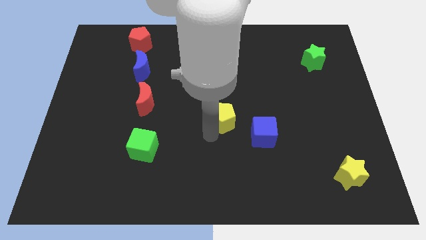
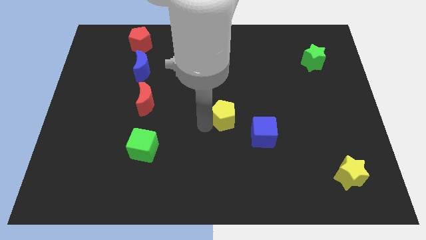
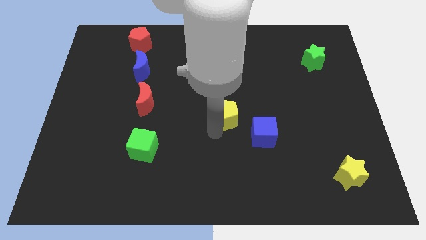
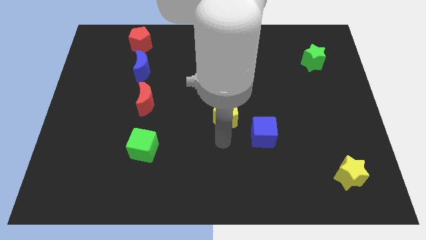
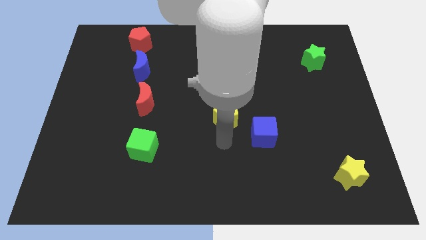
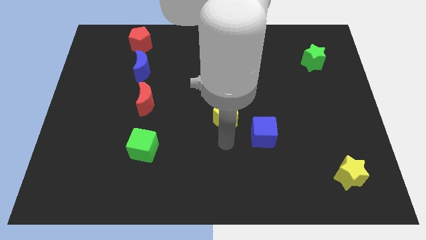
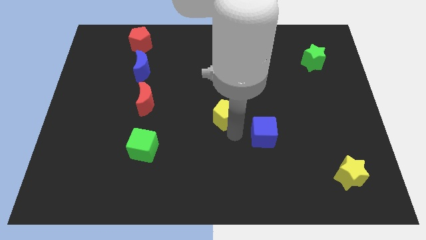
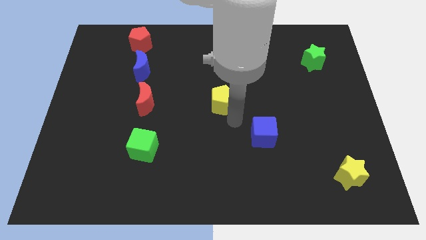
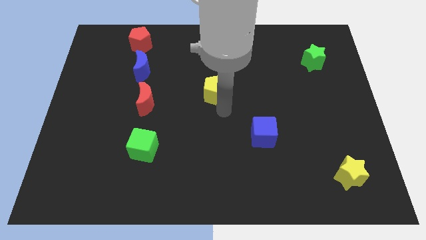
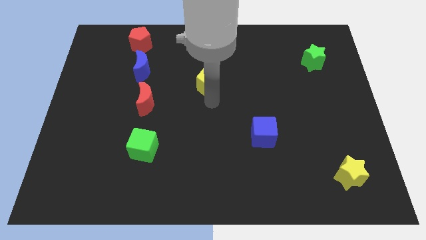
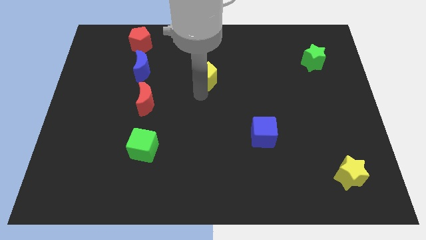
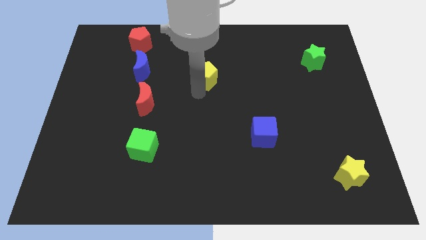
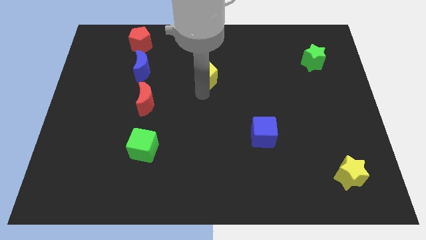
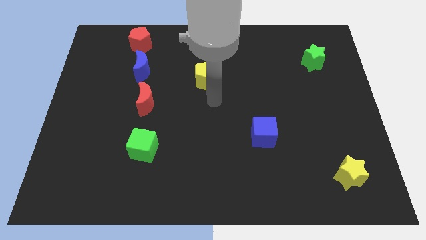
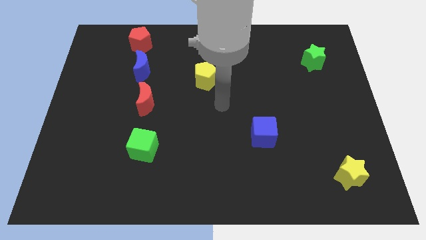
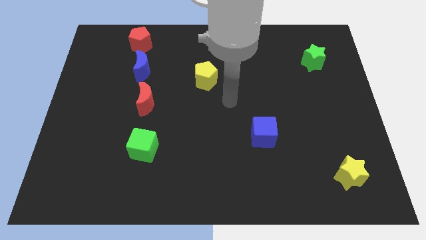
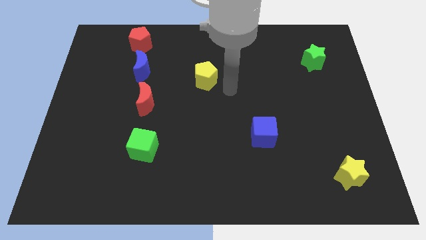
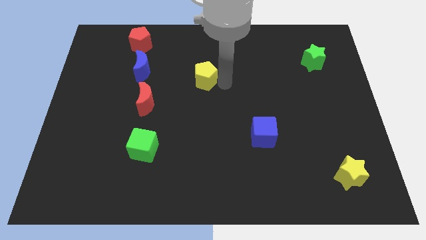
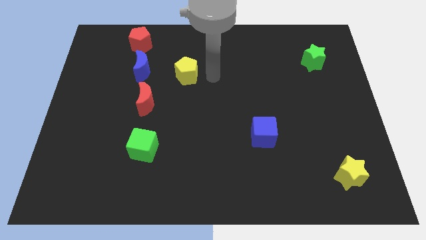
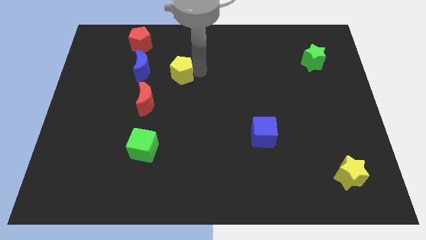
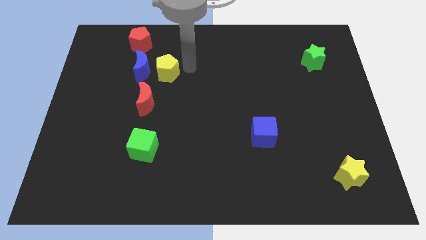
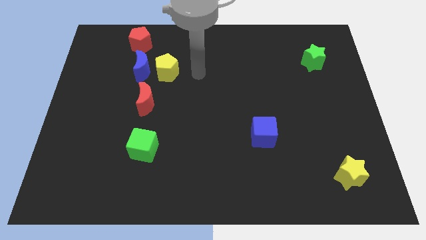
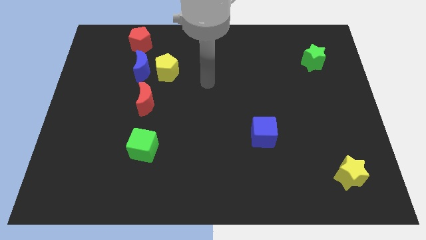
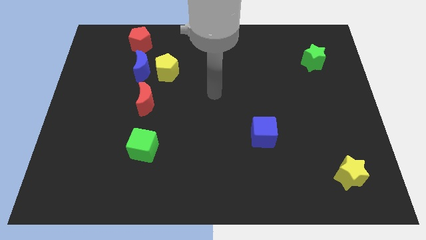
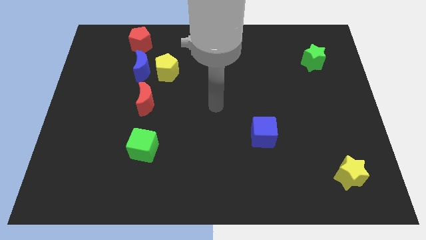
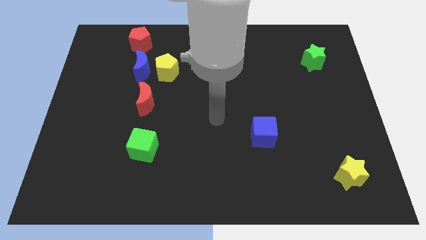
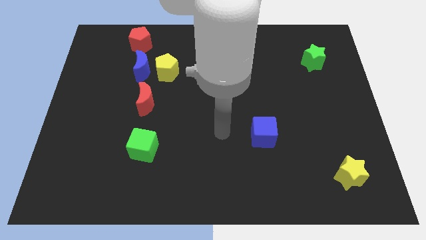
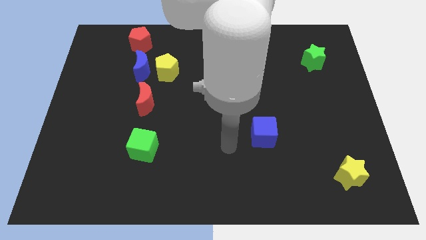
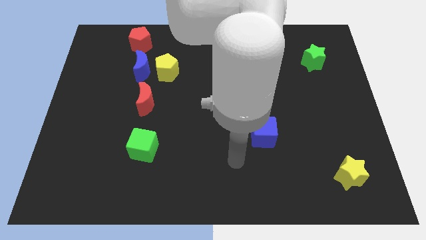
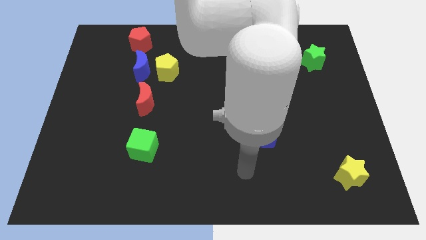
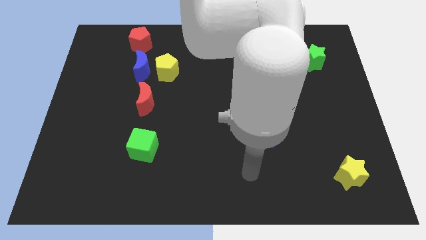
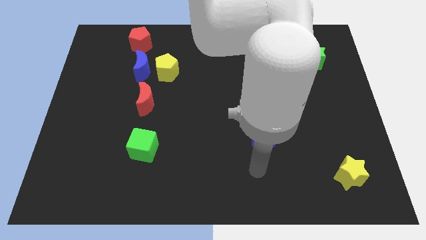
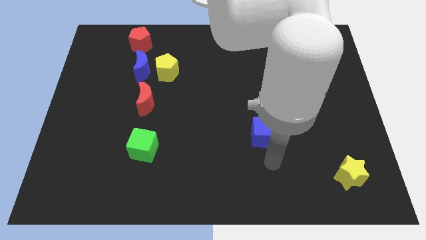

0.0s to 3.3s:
move the yellow pentagon to the right of the blue crescent

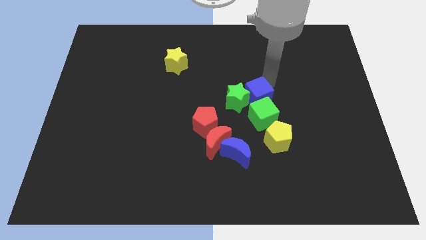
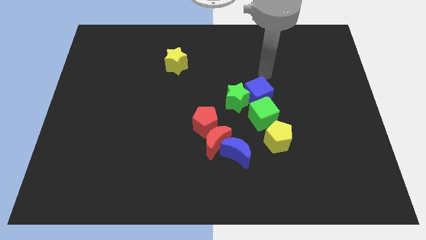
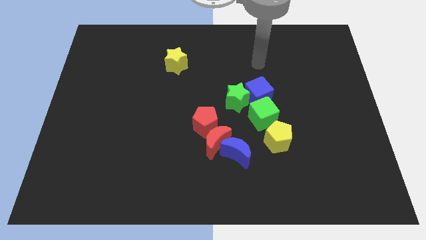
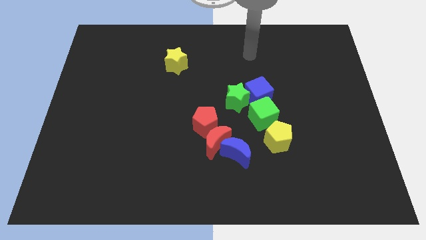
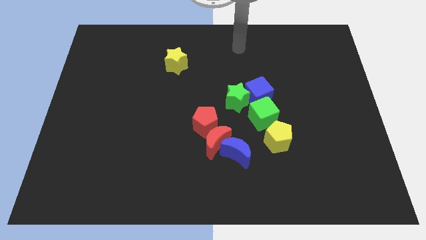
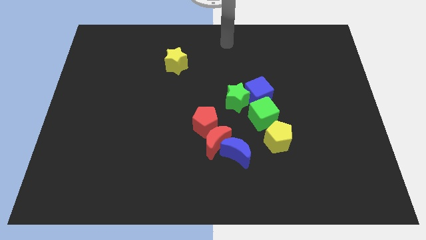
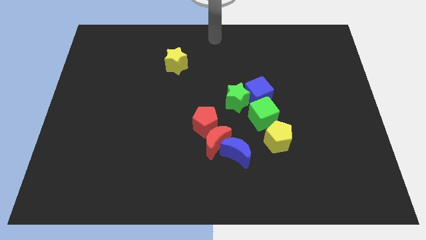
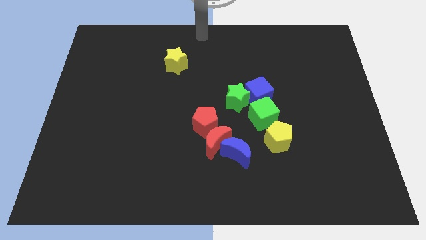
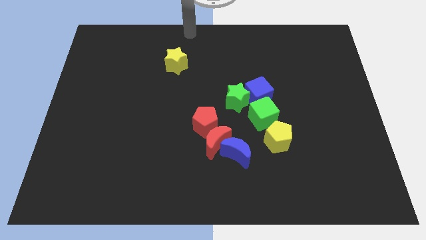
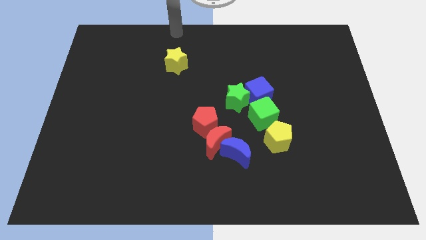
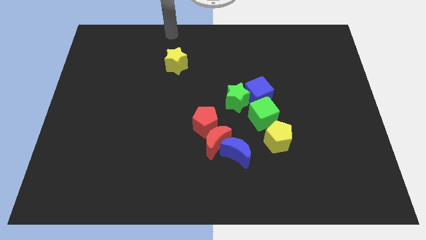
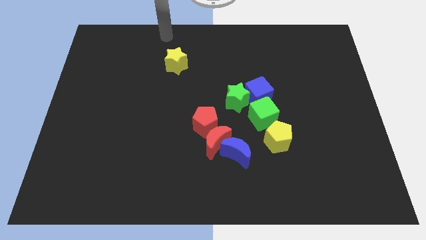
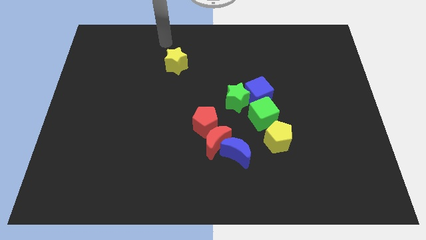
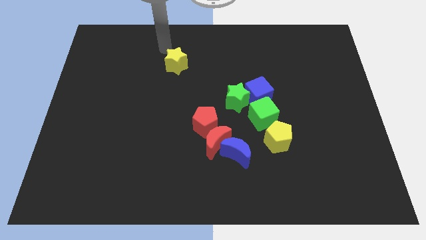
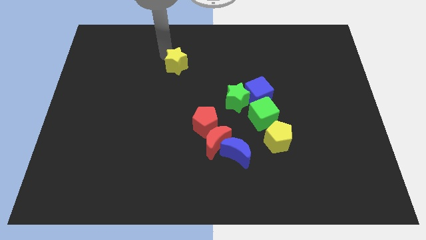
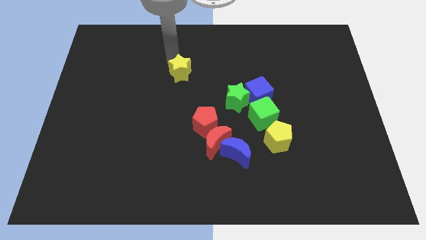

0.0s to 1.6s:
move the arm towards the yellow star

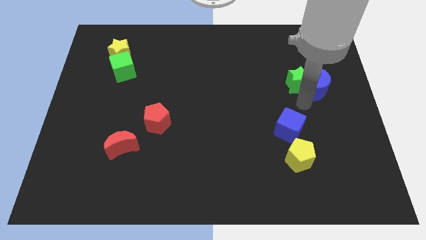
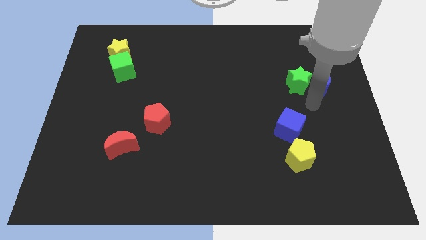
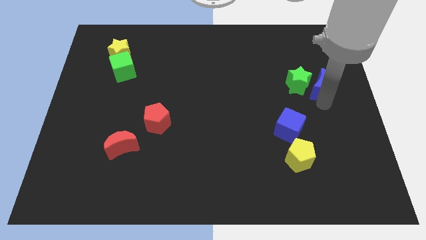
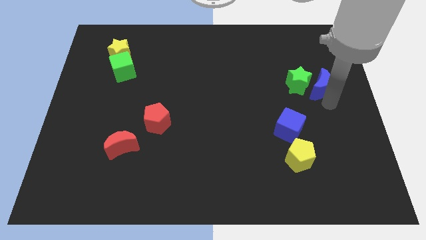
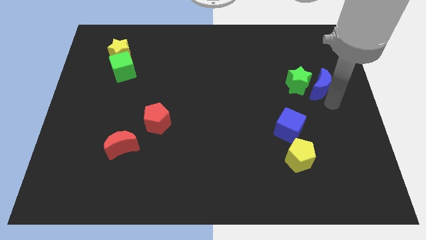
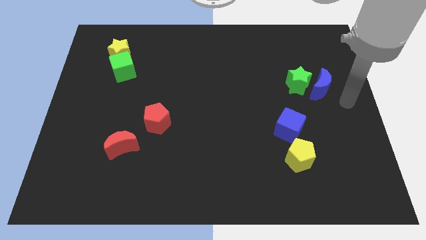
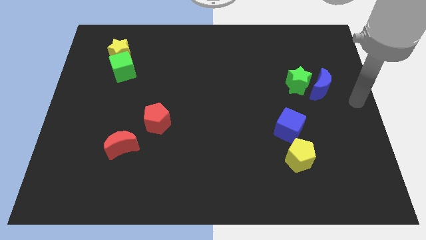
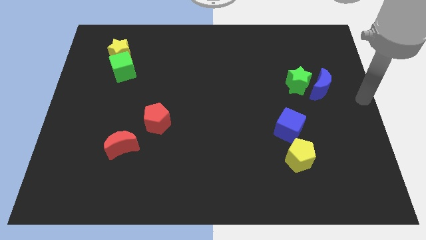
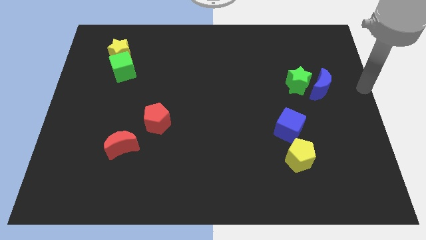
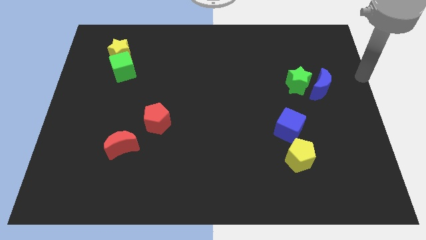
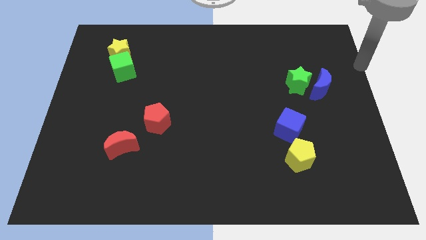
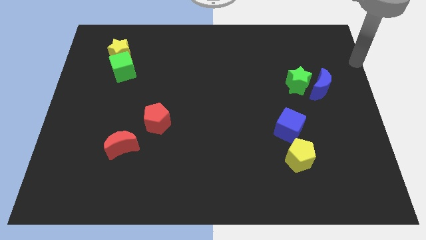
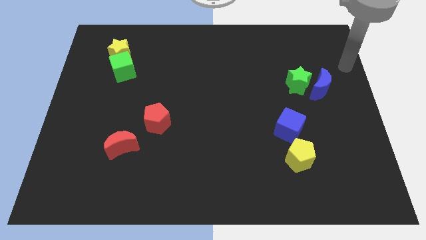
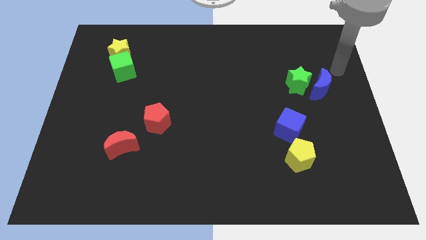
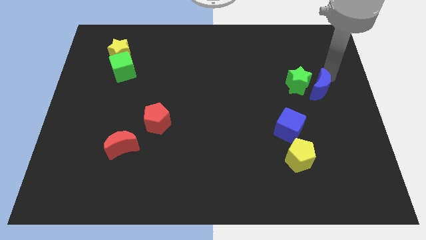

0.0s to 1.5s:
place the arm near the blue moon

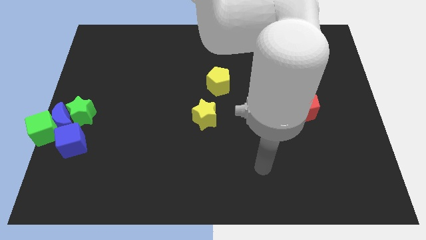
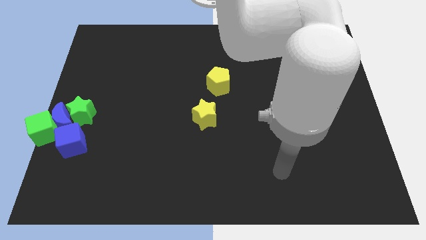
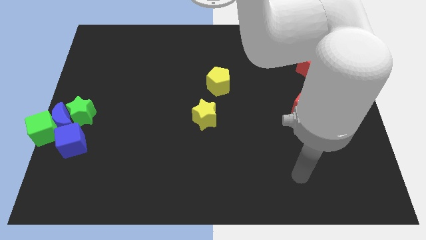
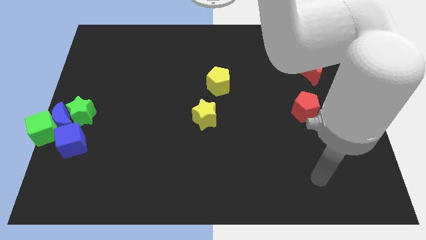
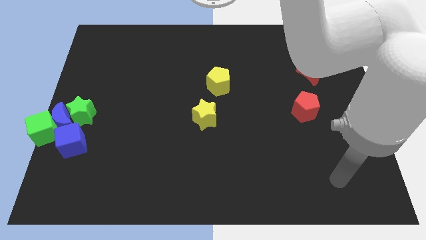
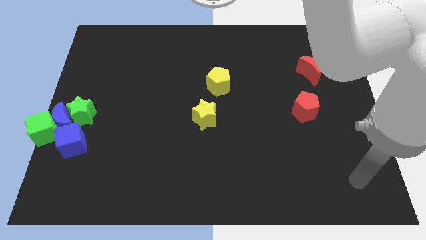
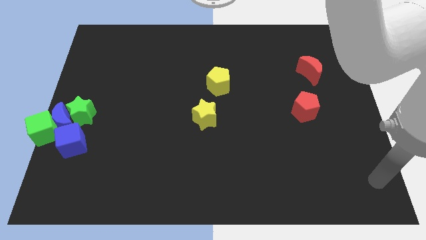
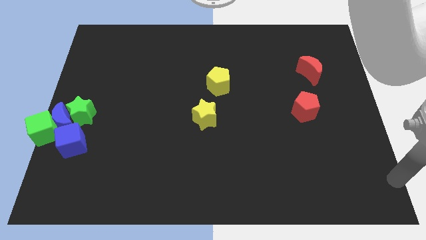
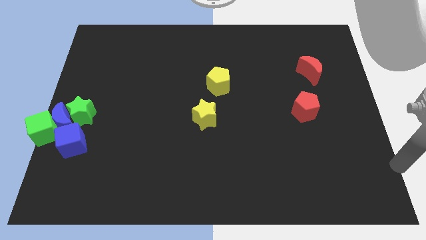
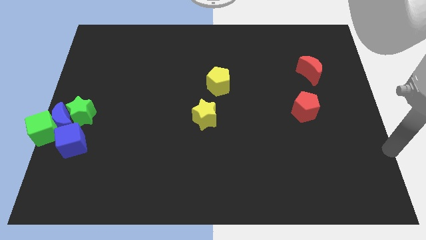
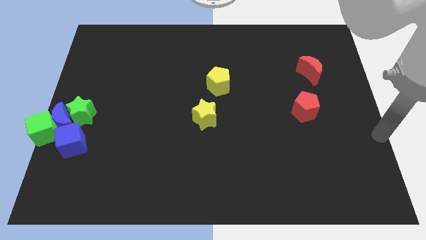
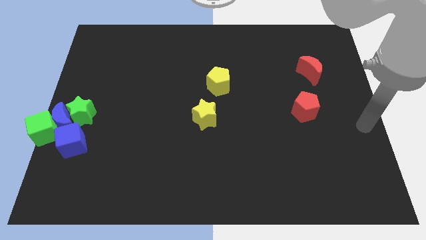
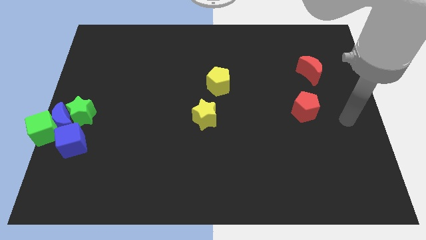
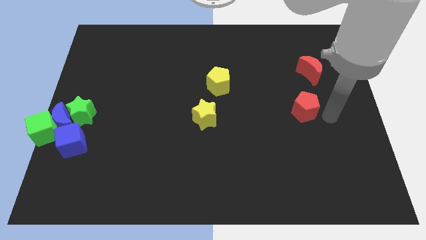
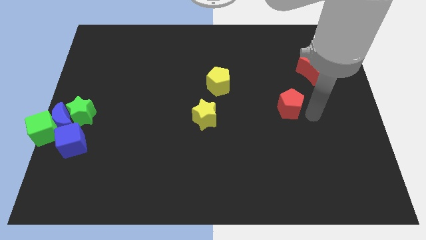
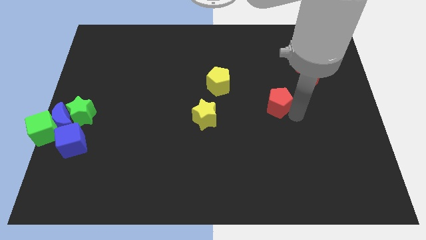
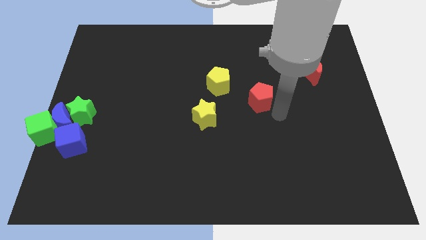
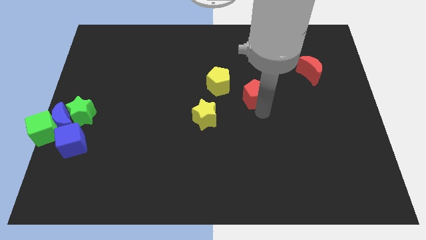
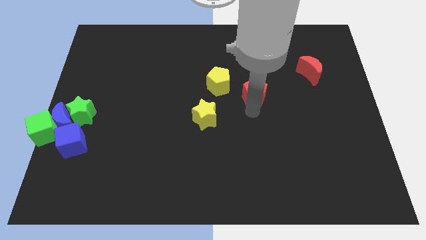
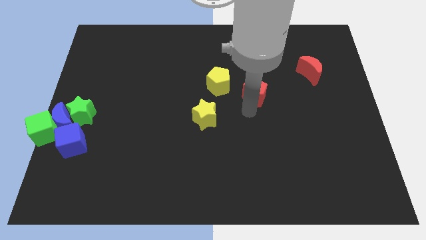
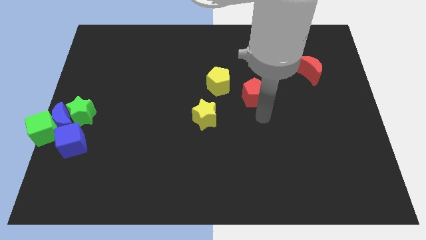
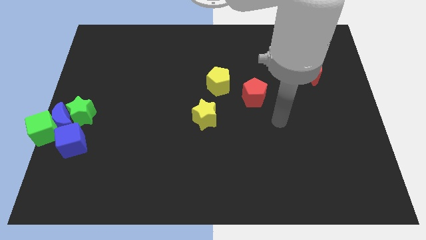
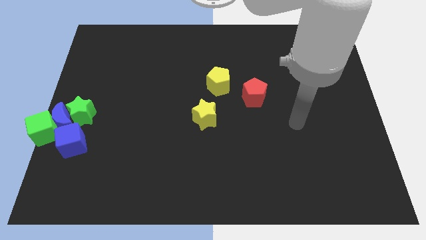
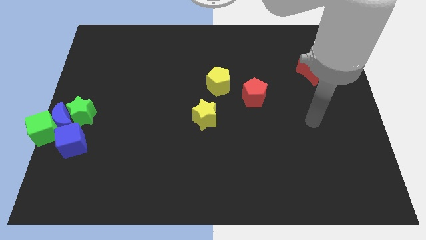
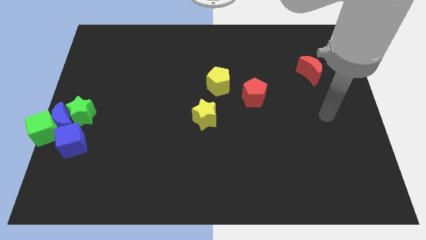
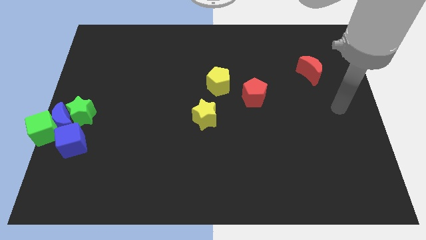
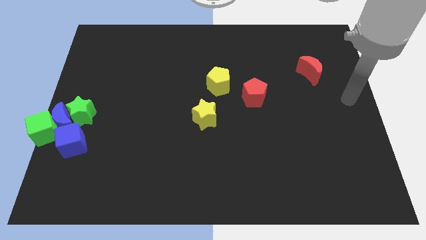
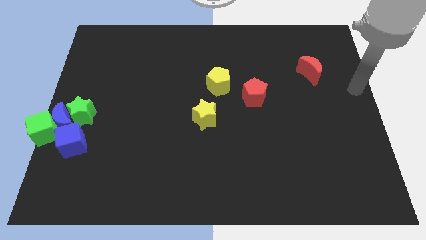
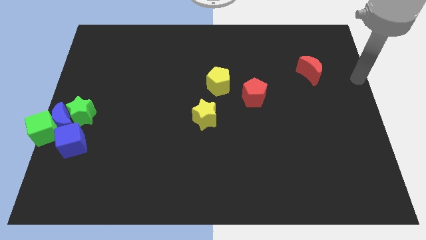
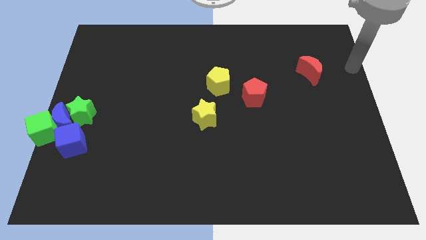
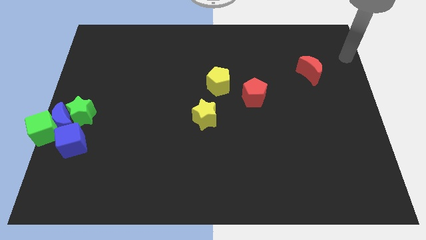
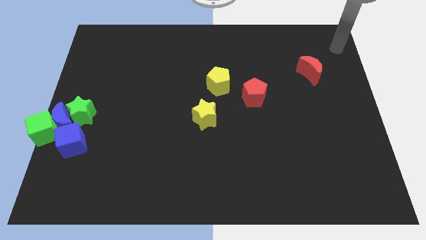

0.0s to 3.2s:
move the red pentagon diagonally to the yellow pentagon
